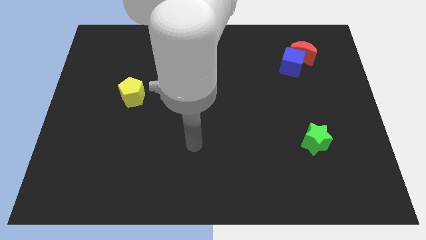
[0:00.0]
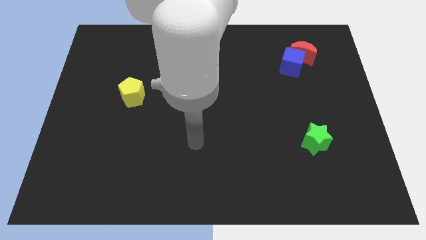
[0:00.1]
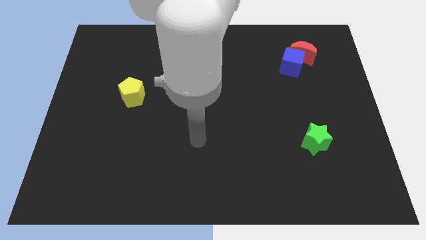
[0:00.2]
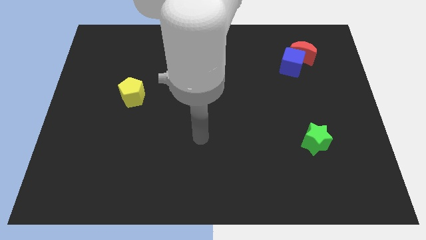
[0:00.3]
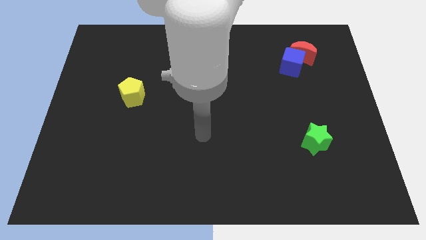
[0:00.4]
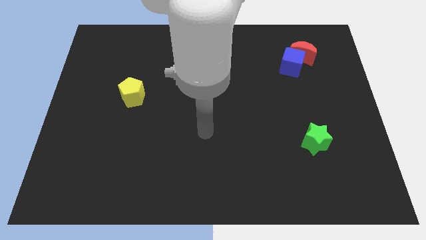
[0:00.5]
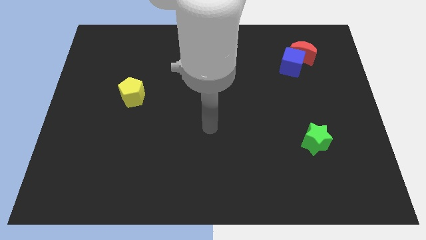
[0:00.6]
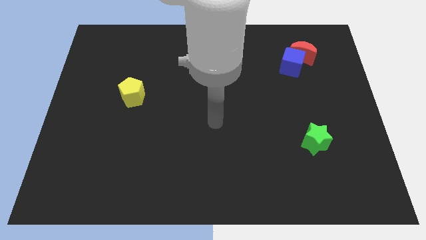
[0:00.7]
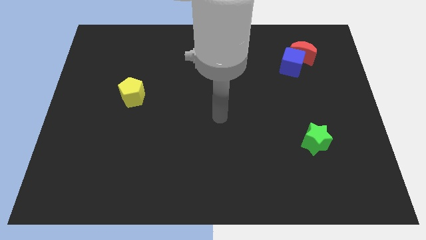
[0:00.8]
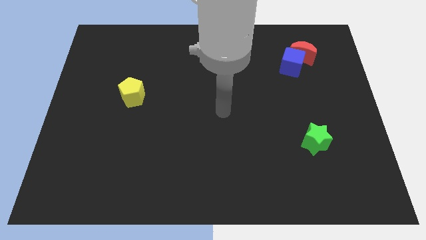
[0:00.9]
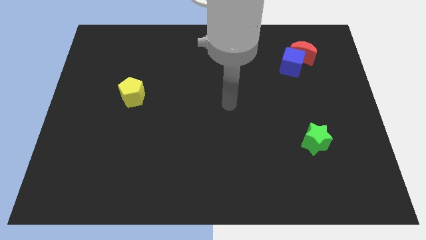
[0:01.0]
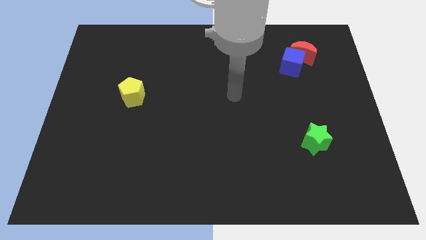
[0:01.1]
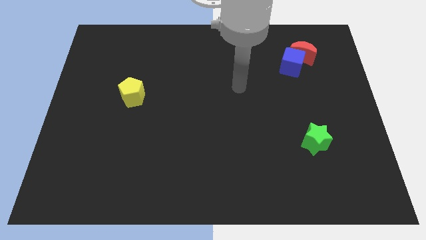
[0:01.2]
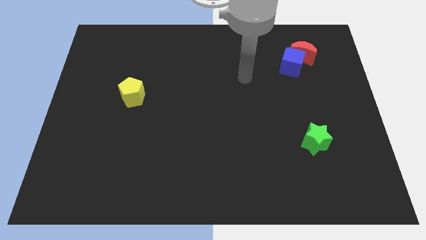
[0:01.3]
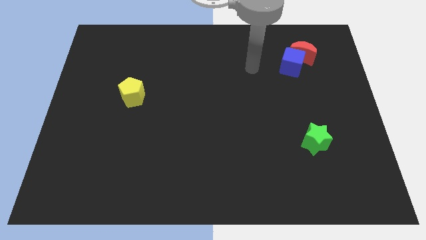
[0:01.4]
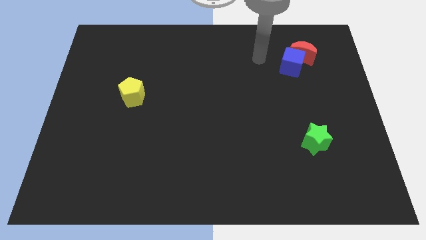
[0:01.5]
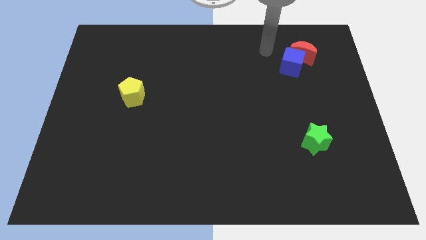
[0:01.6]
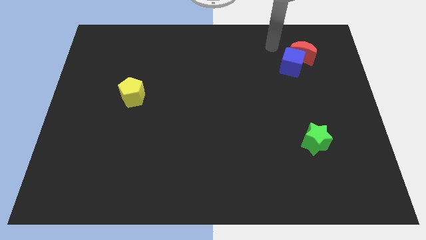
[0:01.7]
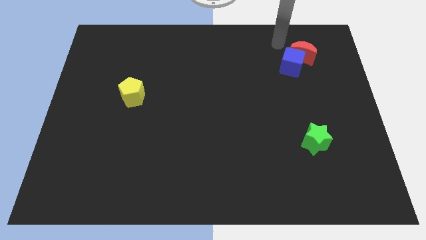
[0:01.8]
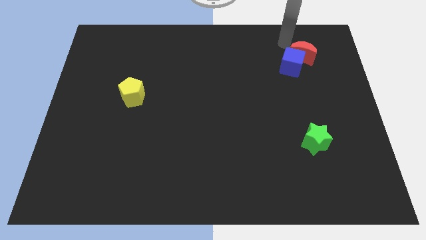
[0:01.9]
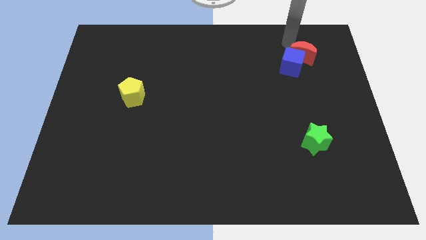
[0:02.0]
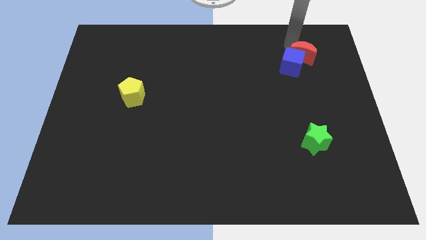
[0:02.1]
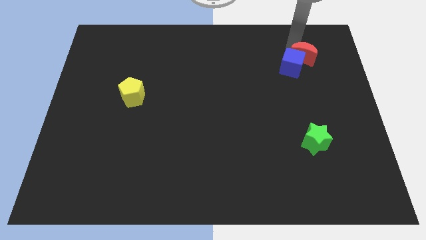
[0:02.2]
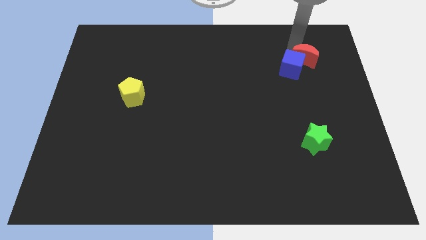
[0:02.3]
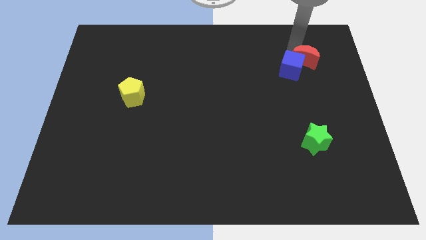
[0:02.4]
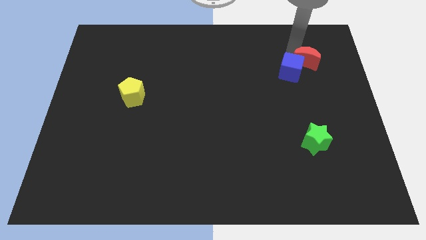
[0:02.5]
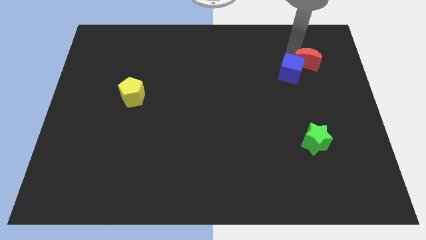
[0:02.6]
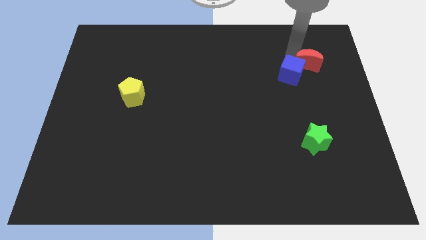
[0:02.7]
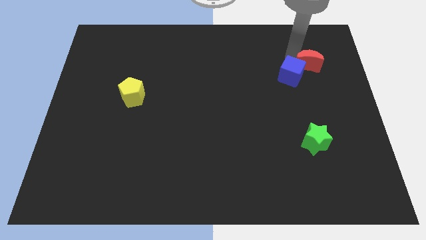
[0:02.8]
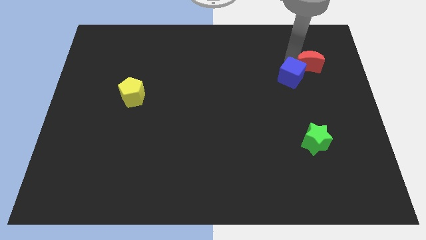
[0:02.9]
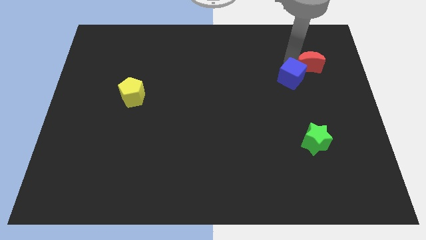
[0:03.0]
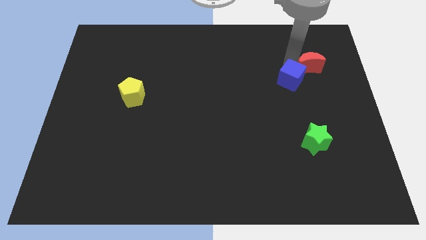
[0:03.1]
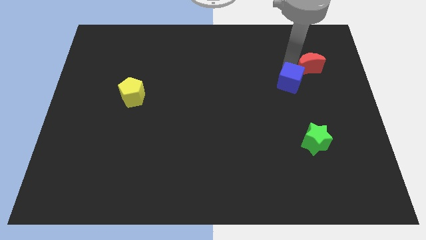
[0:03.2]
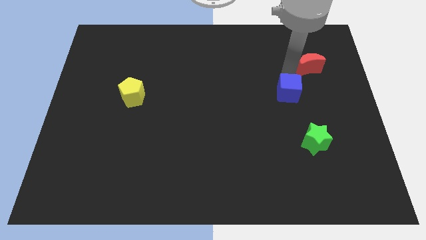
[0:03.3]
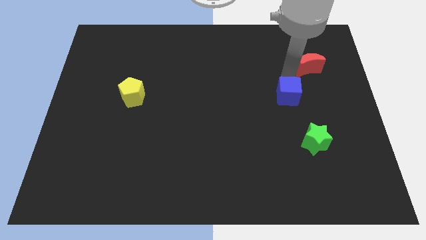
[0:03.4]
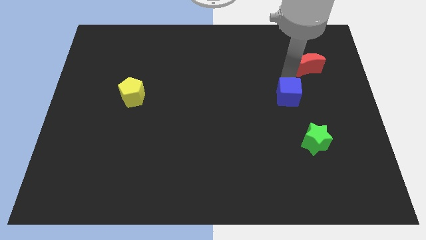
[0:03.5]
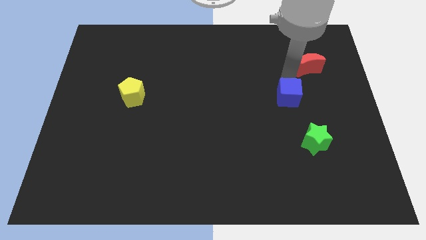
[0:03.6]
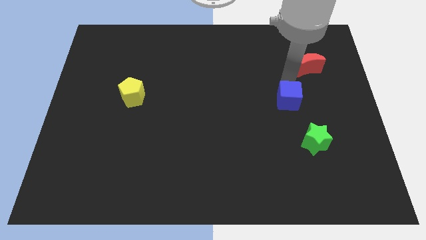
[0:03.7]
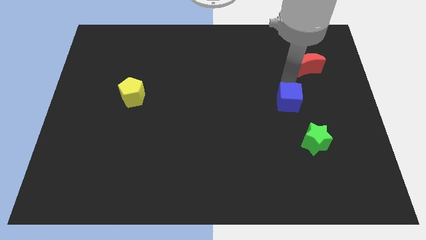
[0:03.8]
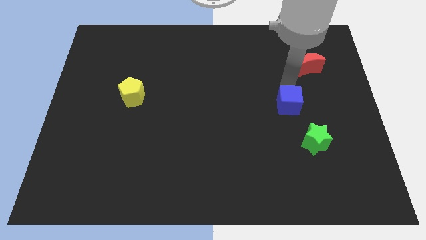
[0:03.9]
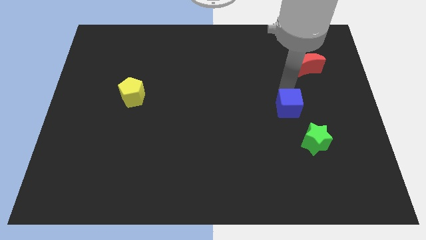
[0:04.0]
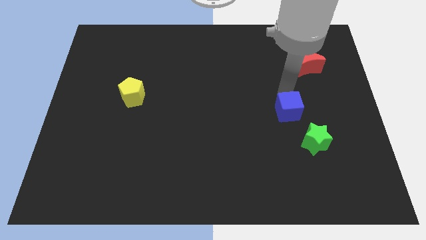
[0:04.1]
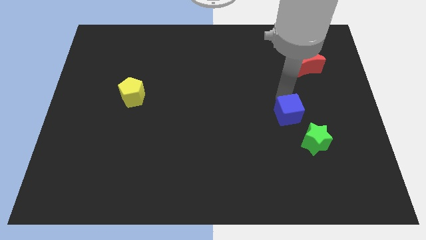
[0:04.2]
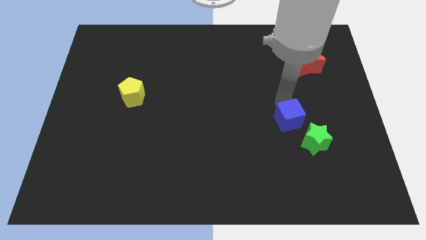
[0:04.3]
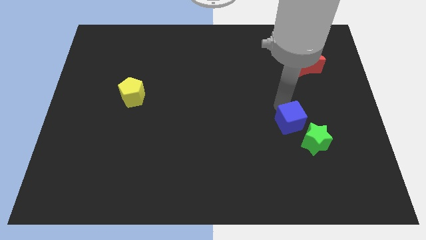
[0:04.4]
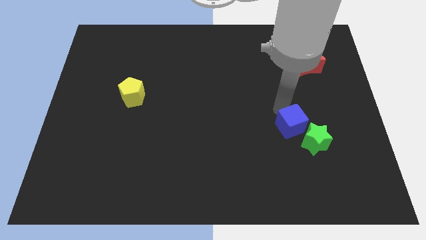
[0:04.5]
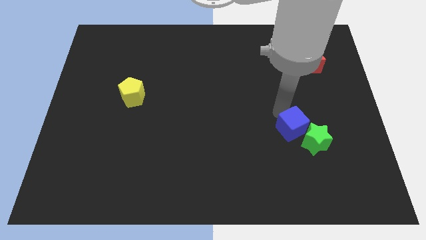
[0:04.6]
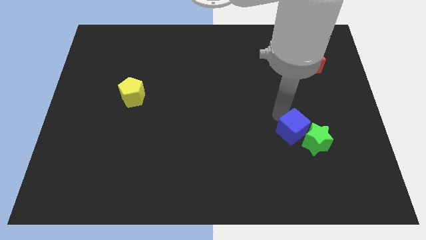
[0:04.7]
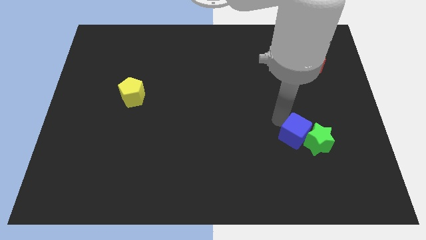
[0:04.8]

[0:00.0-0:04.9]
slide the blue cube close to the star

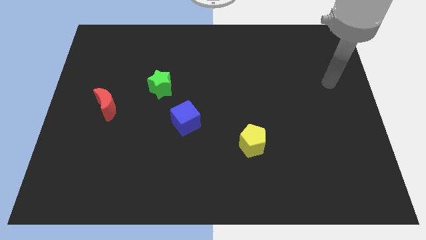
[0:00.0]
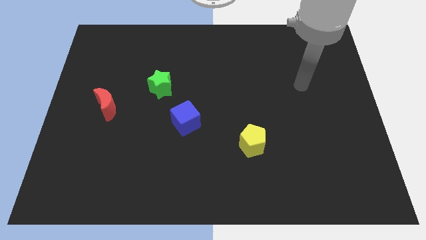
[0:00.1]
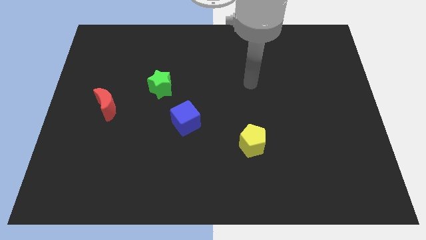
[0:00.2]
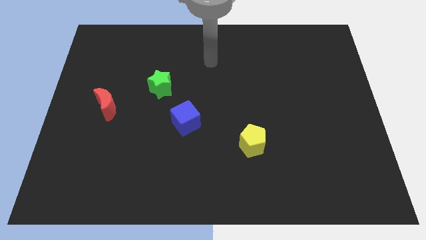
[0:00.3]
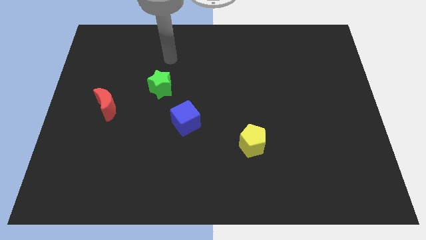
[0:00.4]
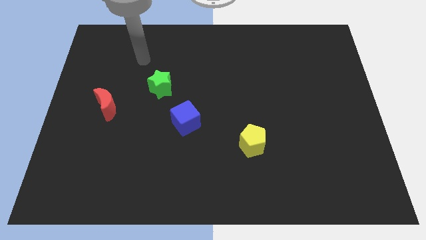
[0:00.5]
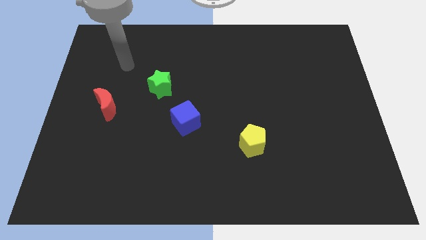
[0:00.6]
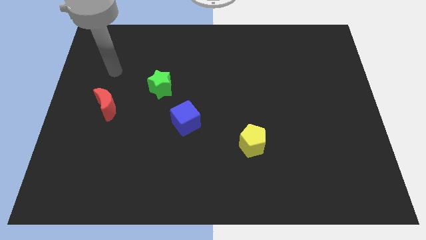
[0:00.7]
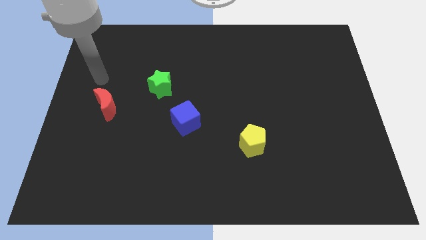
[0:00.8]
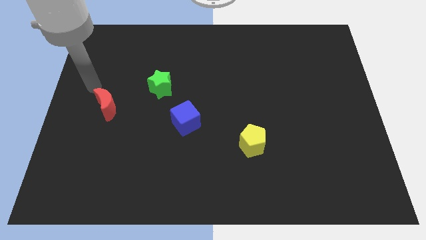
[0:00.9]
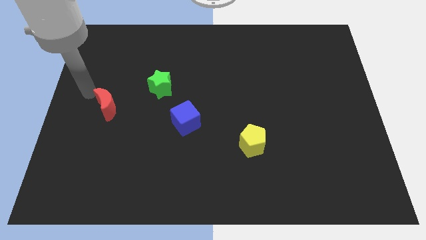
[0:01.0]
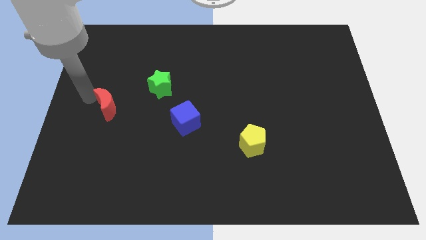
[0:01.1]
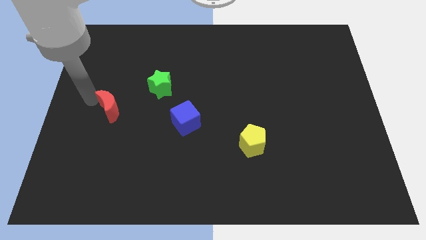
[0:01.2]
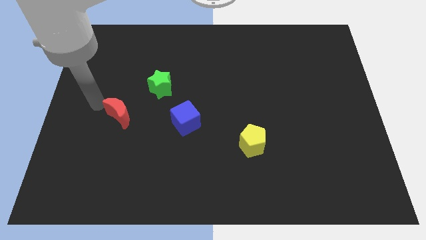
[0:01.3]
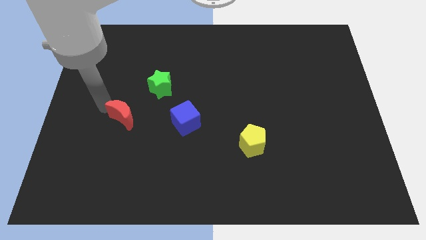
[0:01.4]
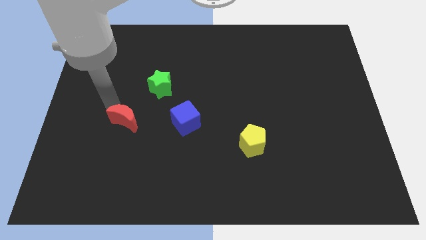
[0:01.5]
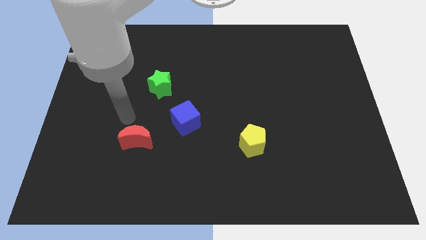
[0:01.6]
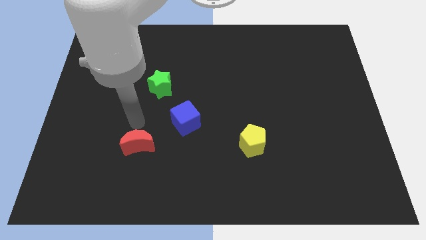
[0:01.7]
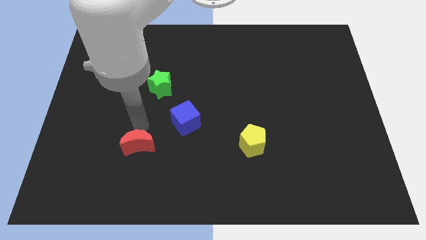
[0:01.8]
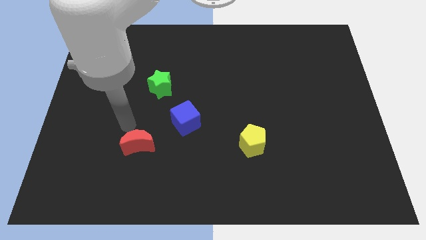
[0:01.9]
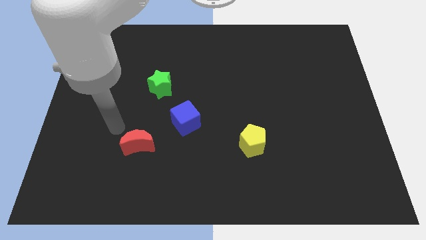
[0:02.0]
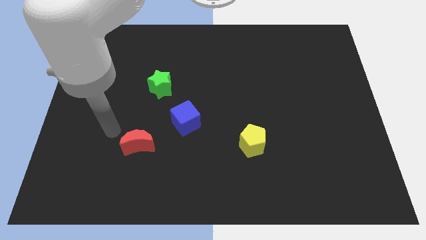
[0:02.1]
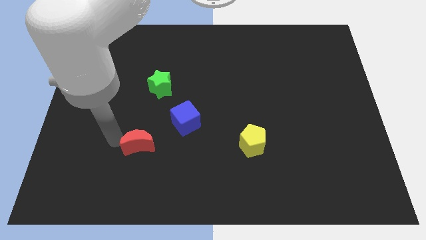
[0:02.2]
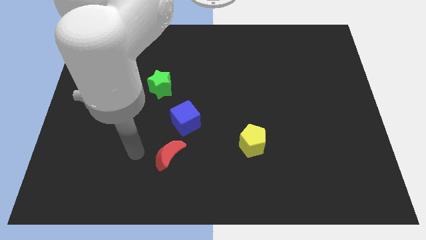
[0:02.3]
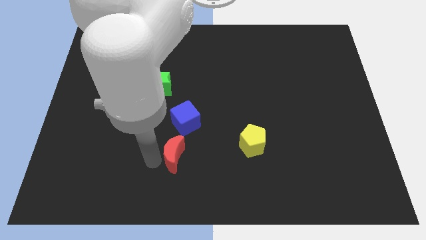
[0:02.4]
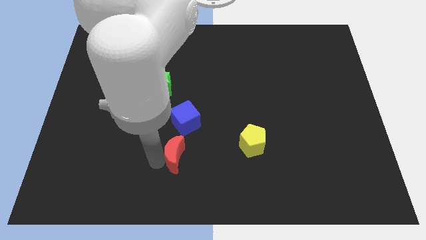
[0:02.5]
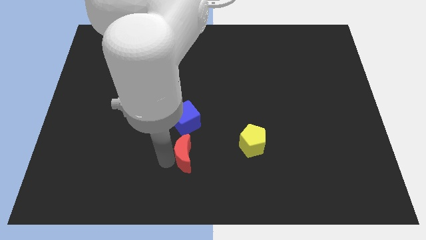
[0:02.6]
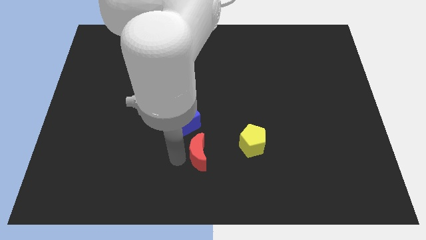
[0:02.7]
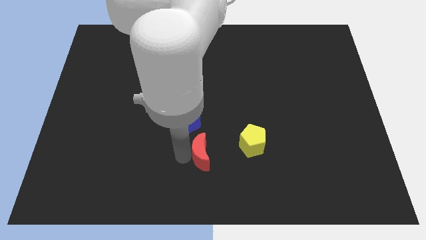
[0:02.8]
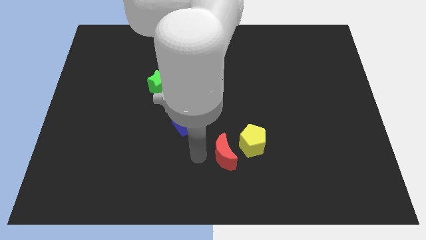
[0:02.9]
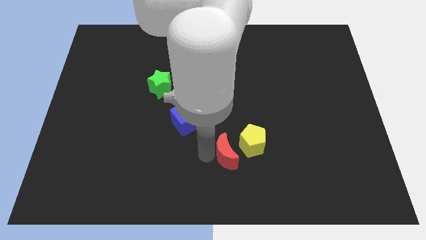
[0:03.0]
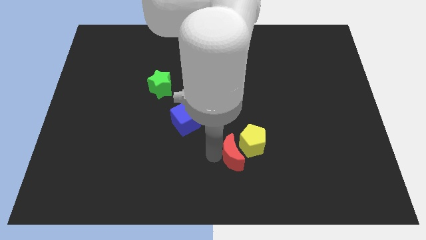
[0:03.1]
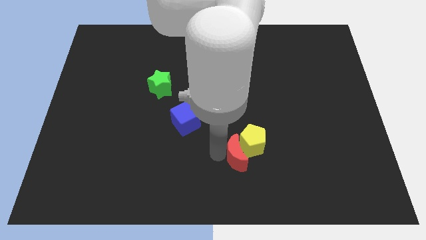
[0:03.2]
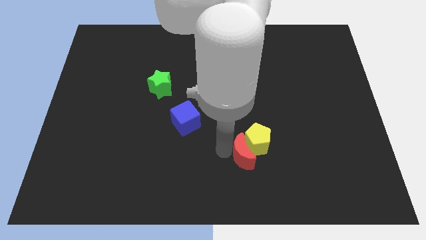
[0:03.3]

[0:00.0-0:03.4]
put the red moon to the yellow pentagon

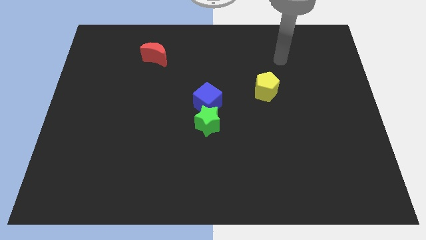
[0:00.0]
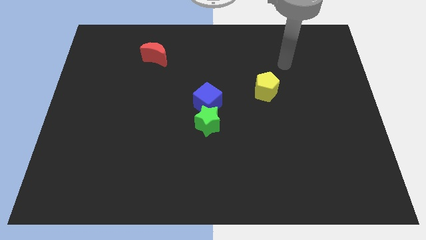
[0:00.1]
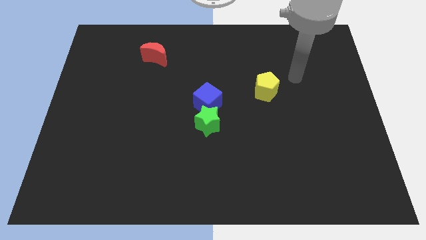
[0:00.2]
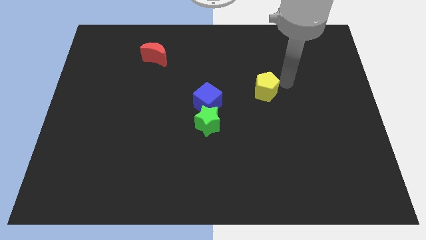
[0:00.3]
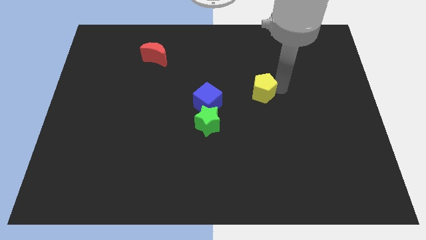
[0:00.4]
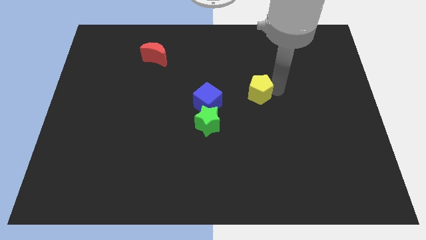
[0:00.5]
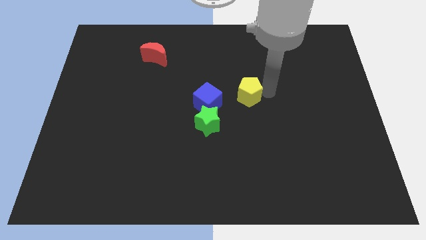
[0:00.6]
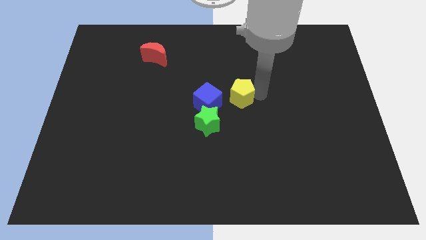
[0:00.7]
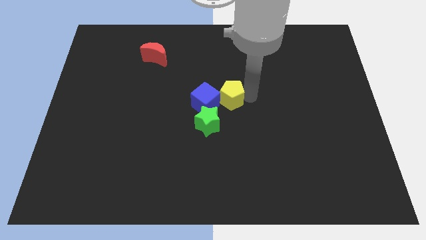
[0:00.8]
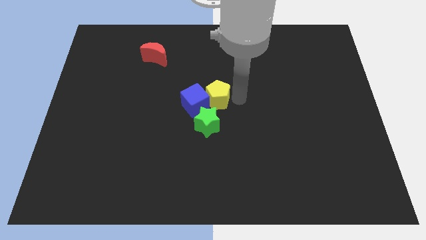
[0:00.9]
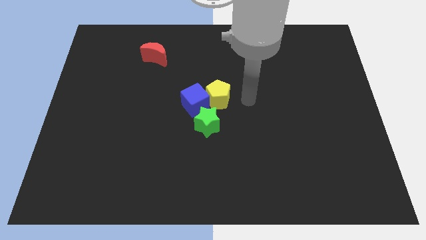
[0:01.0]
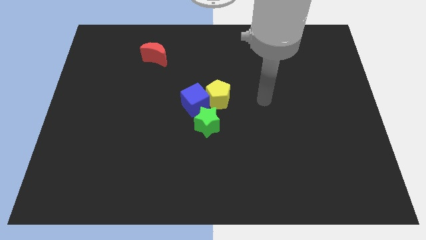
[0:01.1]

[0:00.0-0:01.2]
push the yellow pentagon close to the blue cube
